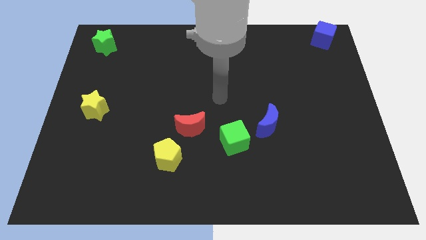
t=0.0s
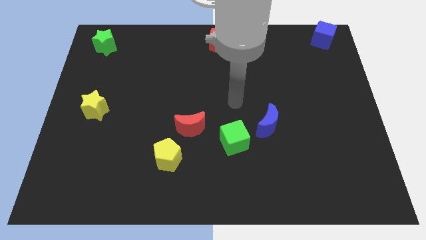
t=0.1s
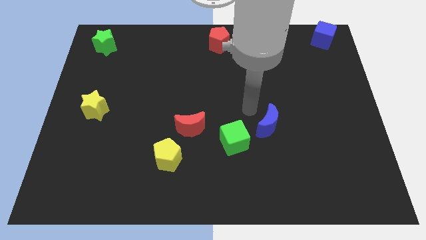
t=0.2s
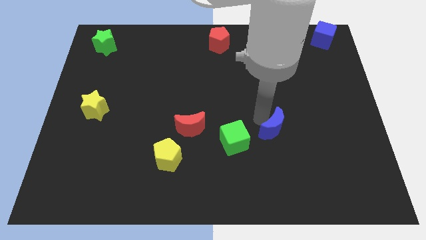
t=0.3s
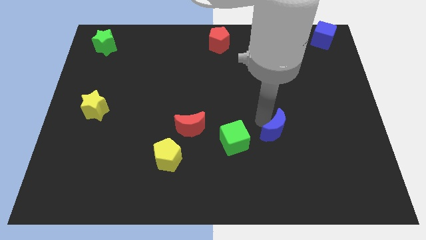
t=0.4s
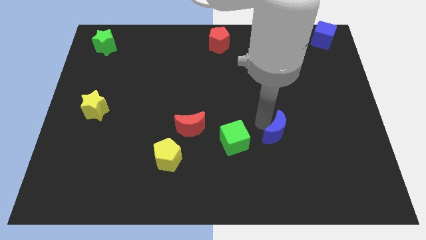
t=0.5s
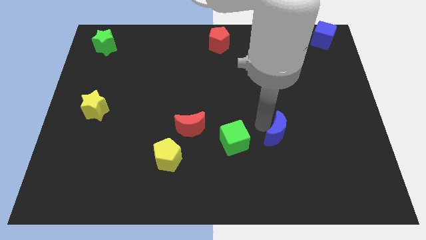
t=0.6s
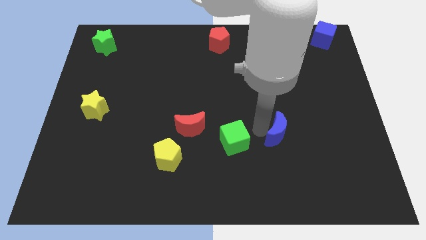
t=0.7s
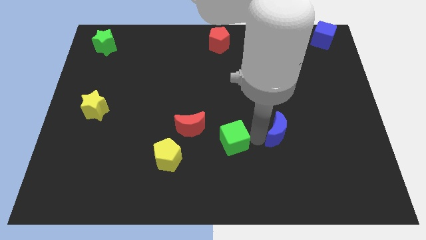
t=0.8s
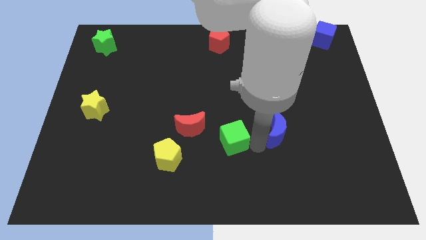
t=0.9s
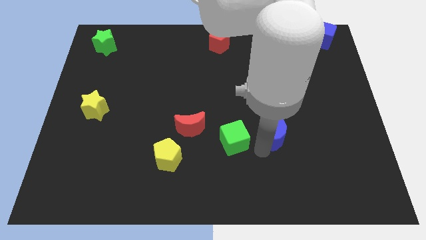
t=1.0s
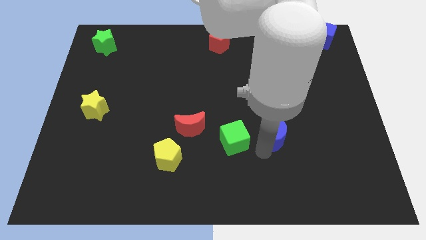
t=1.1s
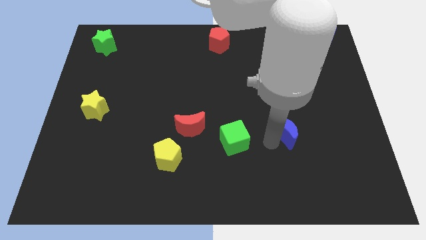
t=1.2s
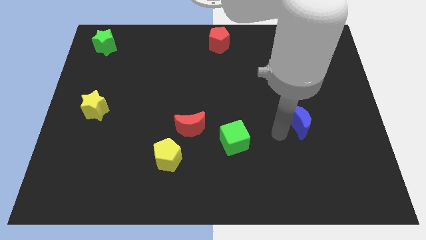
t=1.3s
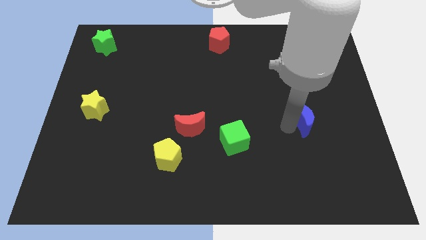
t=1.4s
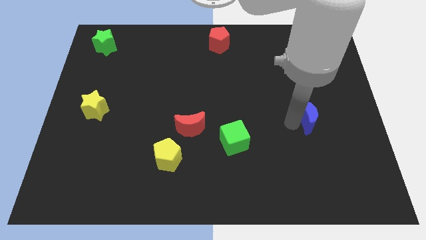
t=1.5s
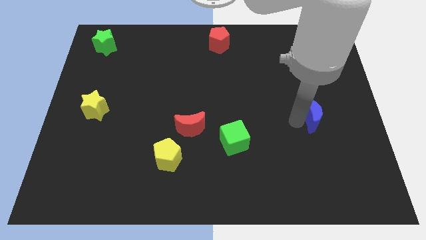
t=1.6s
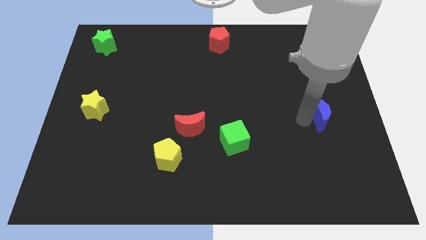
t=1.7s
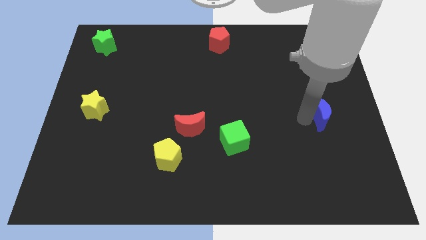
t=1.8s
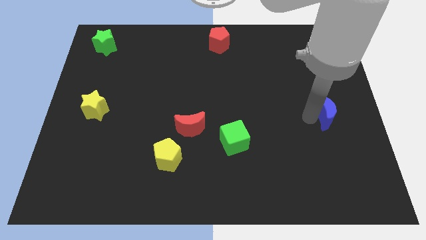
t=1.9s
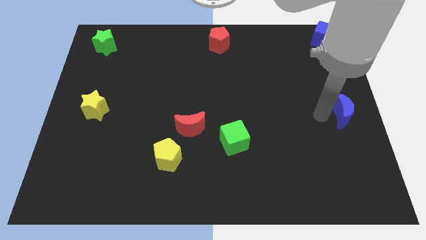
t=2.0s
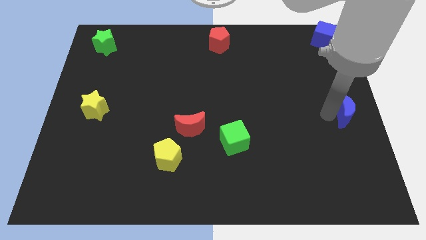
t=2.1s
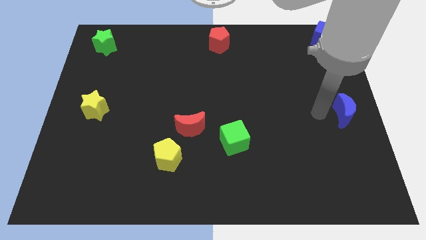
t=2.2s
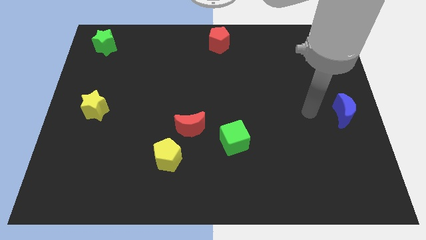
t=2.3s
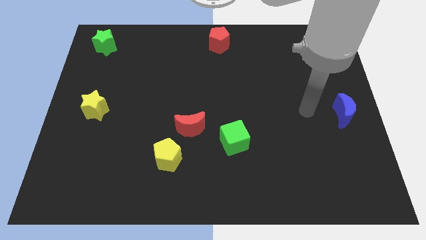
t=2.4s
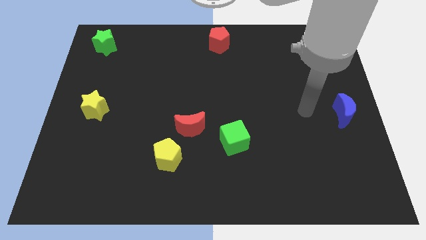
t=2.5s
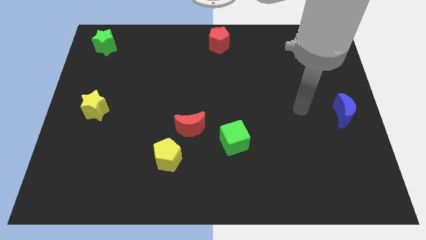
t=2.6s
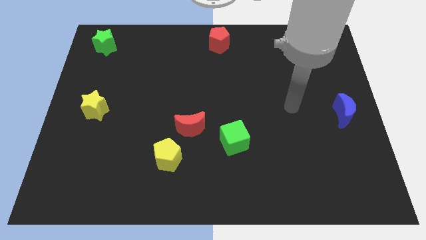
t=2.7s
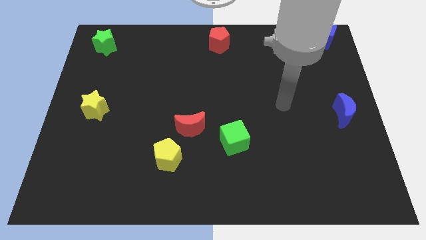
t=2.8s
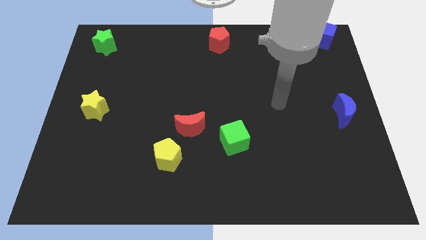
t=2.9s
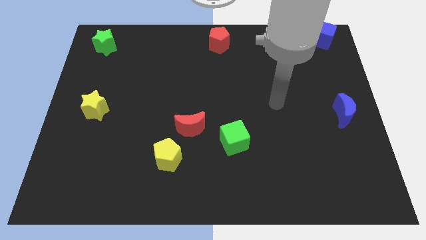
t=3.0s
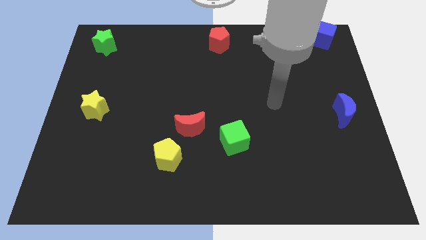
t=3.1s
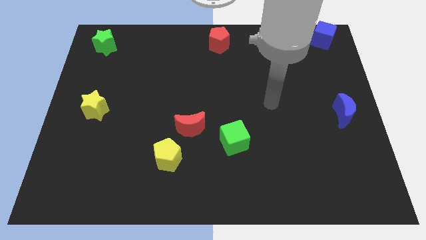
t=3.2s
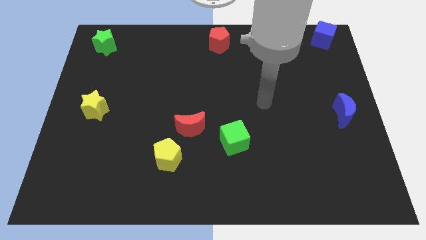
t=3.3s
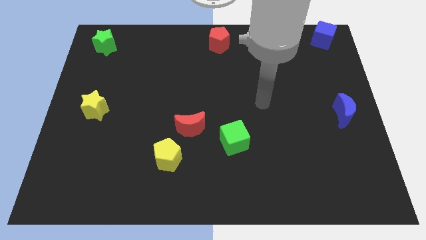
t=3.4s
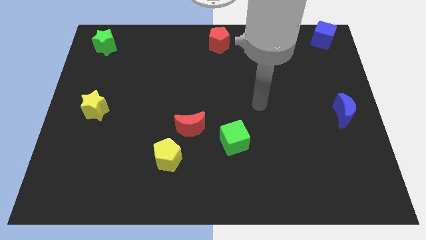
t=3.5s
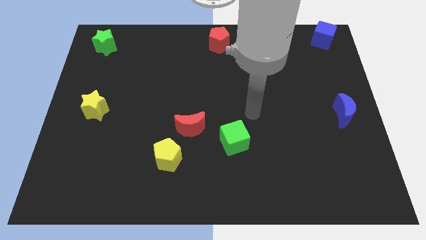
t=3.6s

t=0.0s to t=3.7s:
move the blue moon towards the center right side of the board

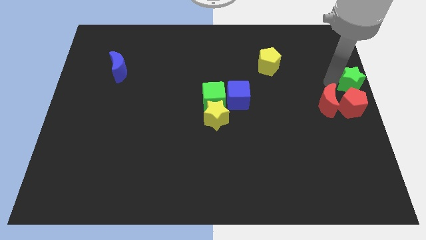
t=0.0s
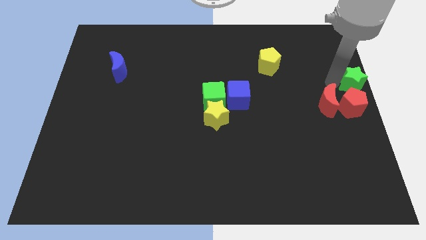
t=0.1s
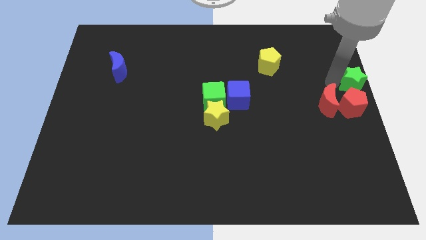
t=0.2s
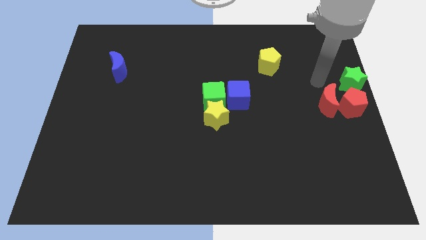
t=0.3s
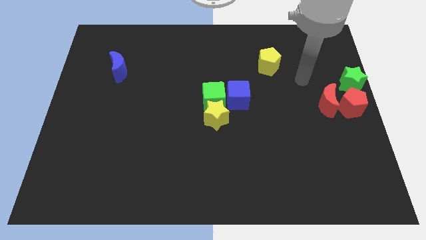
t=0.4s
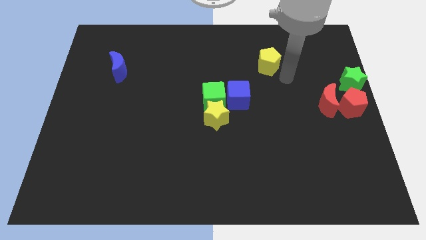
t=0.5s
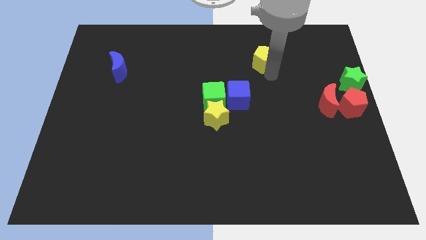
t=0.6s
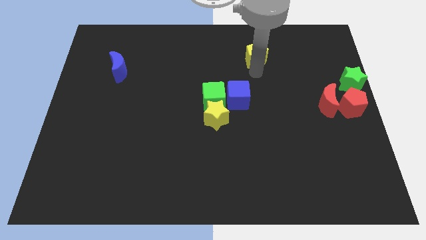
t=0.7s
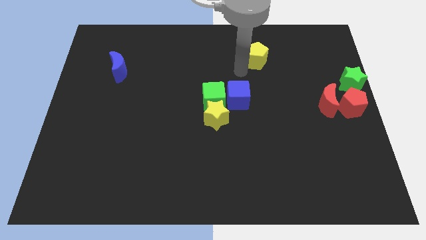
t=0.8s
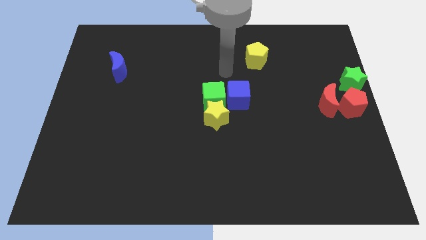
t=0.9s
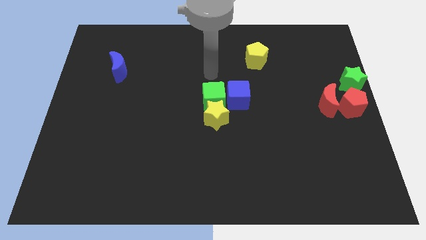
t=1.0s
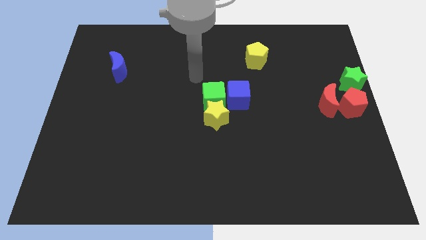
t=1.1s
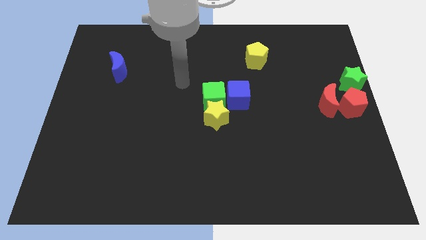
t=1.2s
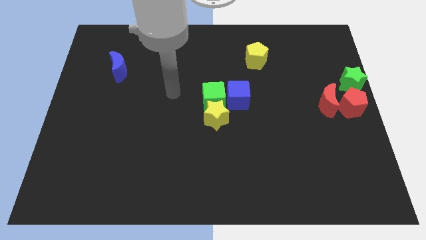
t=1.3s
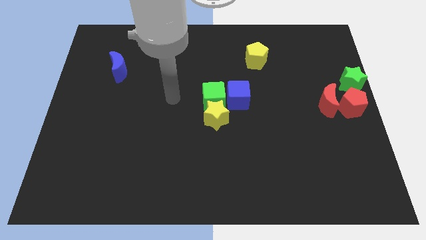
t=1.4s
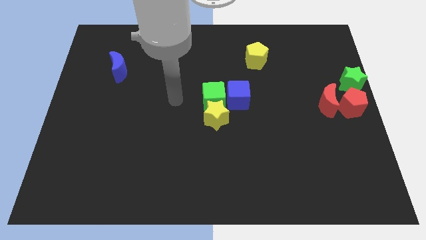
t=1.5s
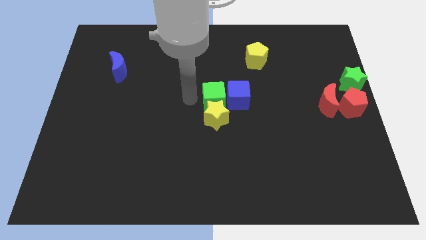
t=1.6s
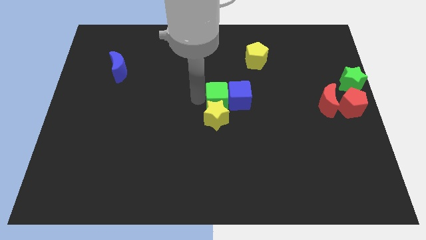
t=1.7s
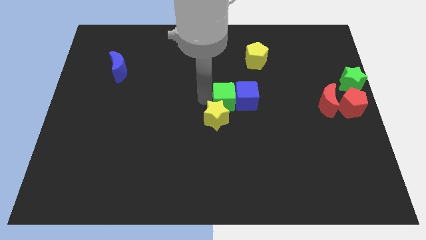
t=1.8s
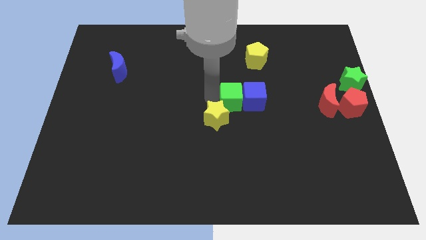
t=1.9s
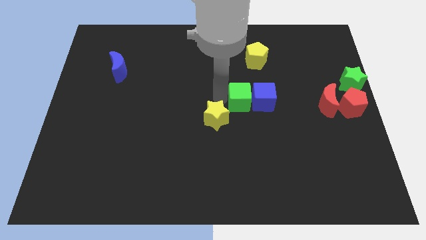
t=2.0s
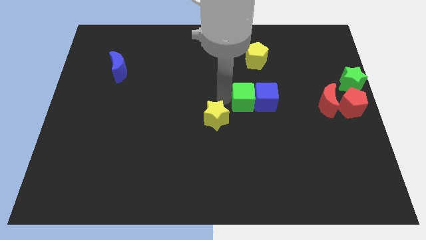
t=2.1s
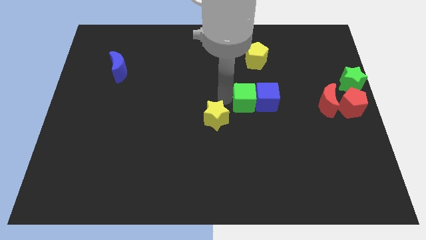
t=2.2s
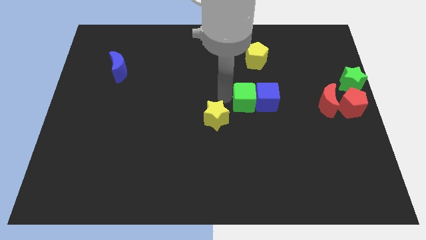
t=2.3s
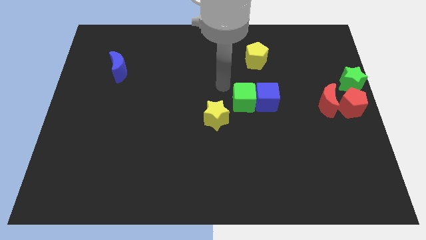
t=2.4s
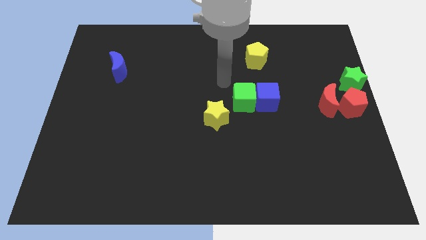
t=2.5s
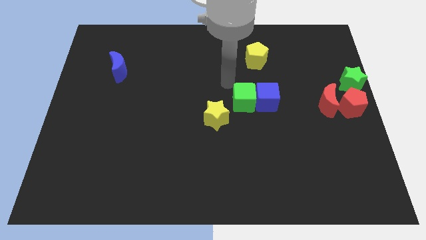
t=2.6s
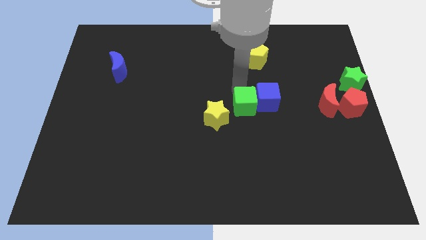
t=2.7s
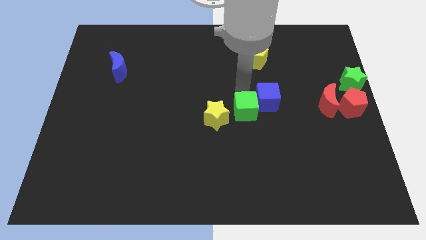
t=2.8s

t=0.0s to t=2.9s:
move the arm away from the green star

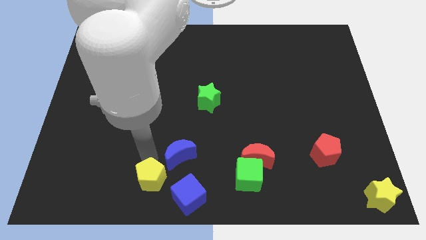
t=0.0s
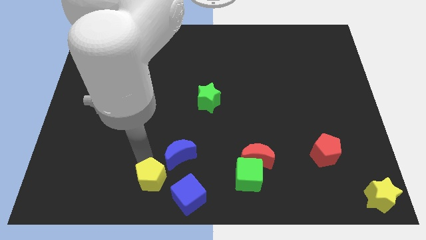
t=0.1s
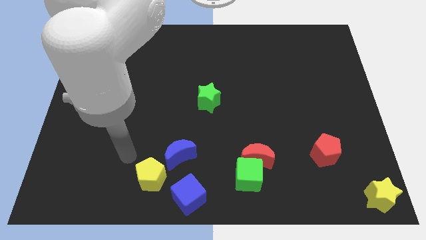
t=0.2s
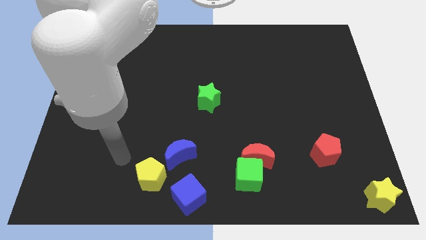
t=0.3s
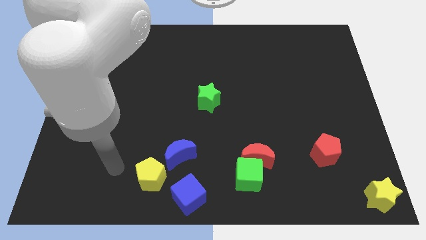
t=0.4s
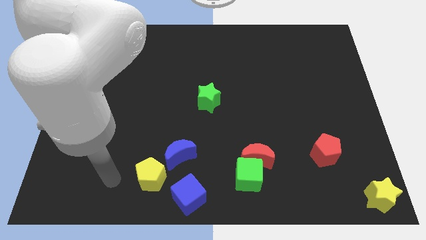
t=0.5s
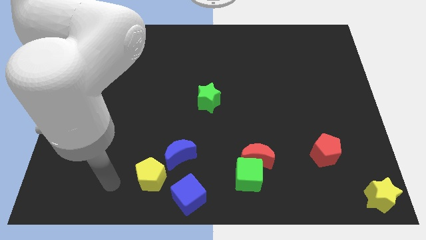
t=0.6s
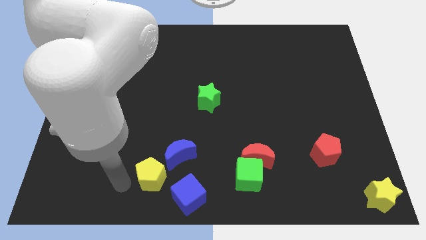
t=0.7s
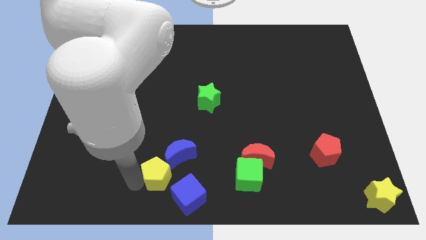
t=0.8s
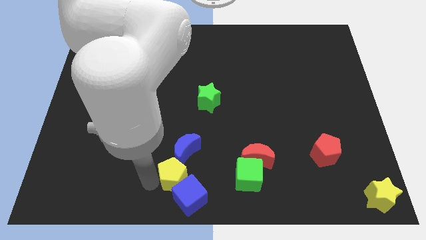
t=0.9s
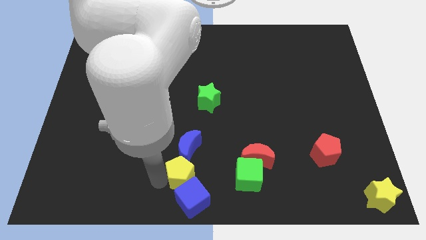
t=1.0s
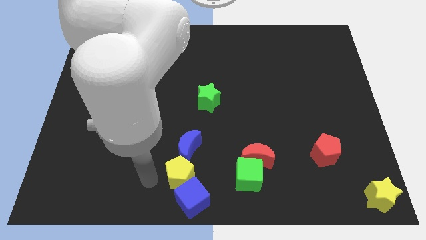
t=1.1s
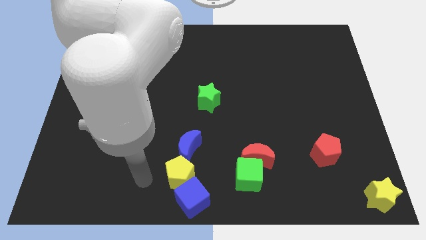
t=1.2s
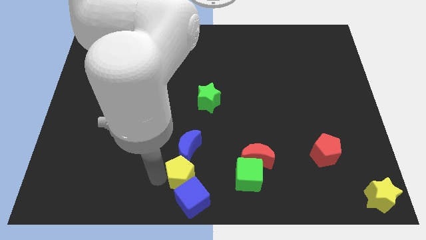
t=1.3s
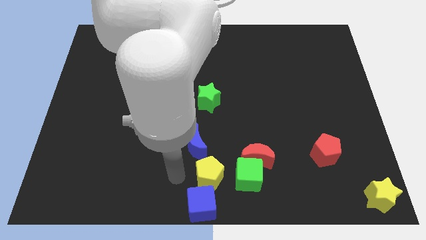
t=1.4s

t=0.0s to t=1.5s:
put the yellow pentagon to the top left side of the blue cube

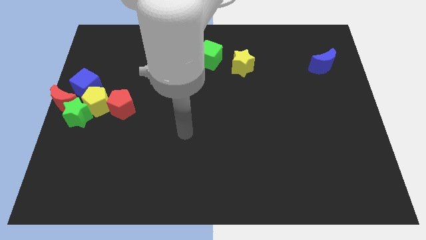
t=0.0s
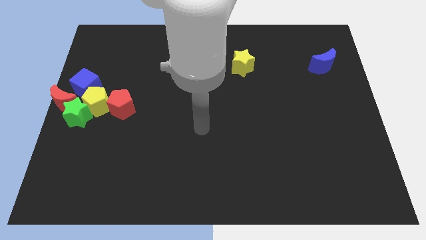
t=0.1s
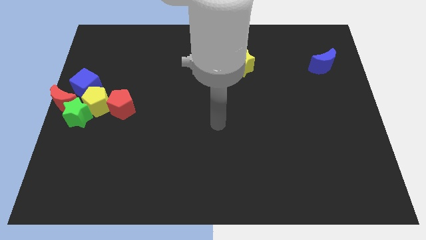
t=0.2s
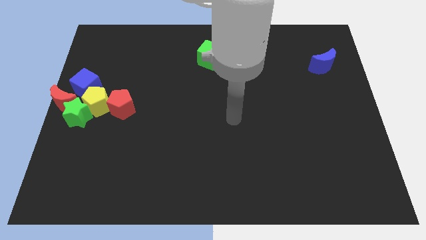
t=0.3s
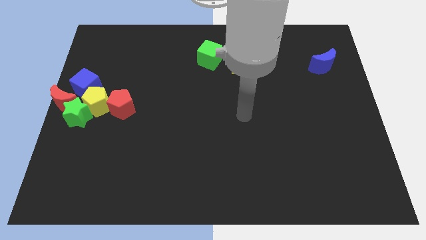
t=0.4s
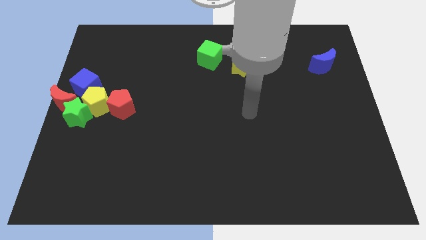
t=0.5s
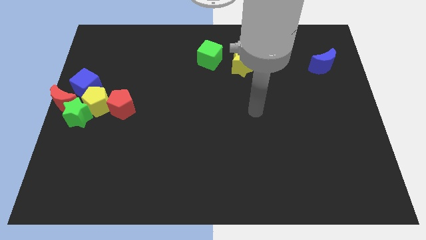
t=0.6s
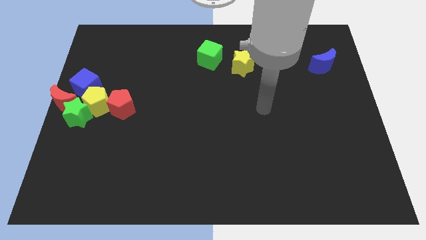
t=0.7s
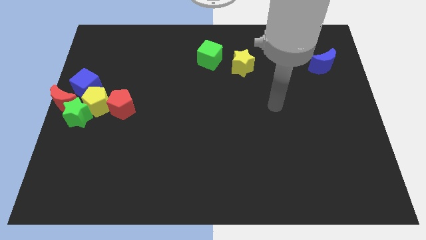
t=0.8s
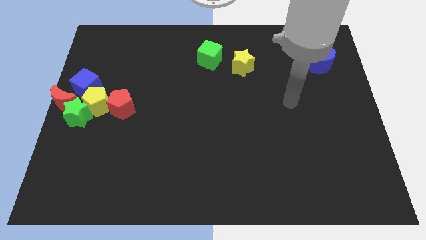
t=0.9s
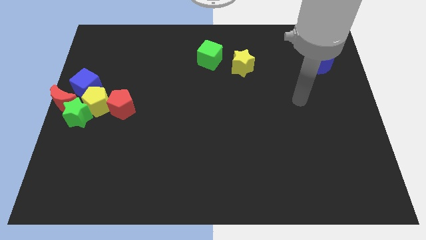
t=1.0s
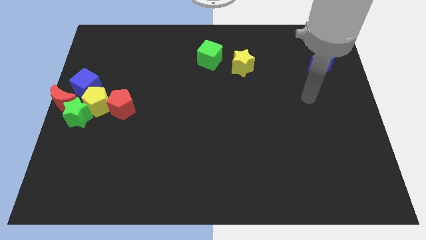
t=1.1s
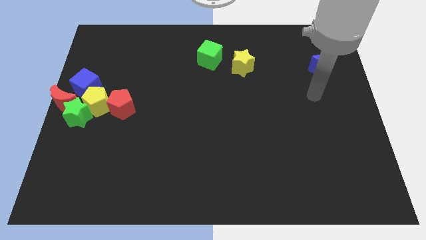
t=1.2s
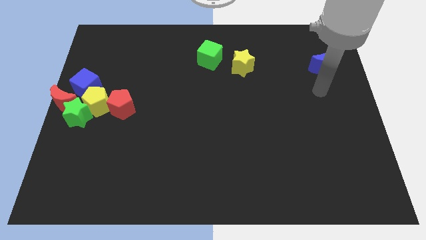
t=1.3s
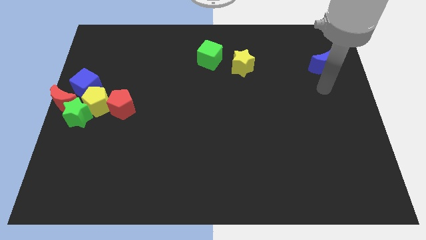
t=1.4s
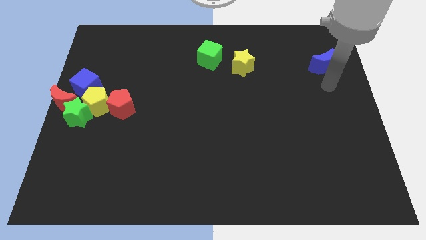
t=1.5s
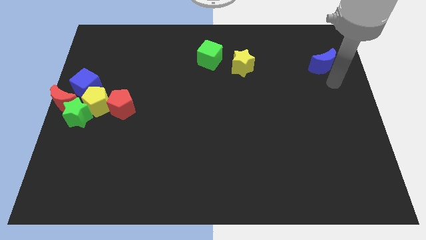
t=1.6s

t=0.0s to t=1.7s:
move your arm to the bottom side of the blue crescent
